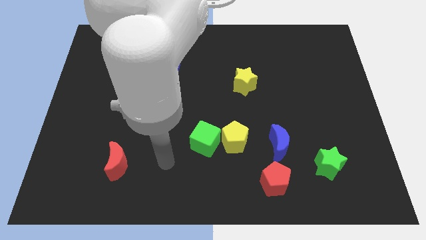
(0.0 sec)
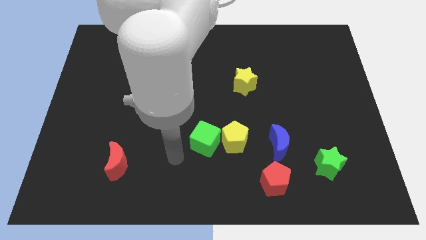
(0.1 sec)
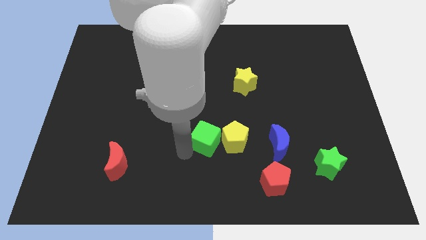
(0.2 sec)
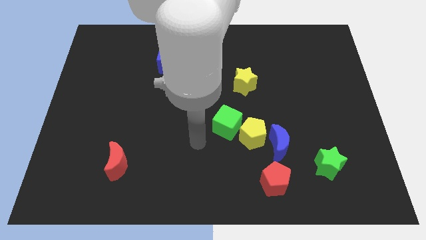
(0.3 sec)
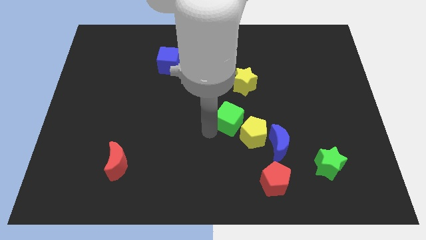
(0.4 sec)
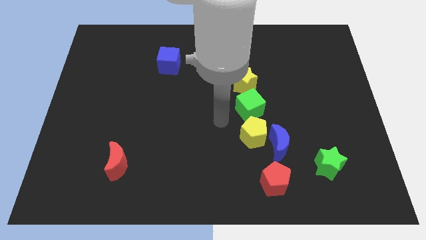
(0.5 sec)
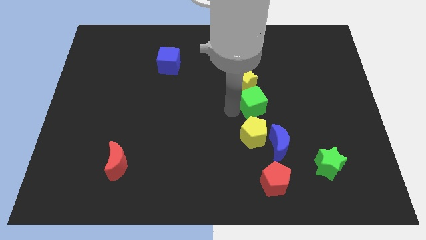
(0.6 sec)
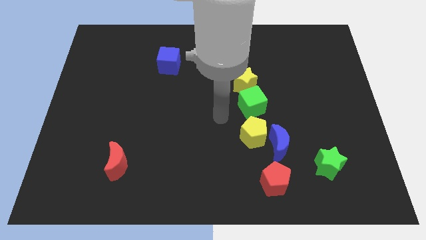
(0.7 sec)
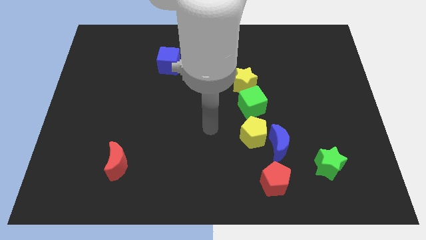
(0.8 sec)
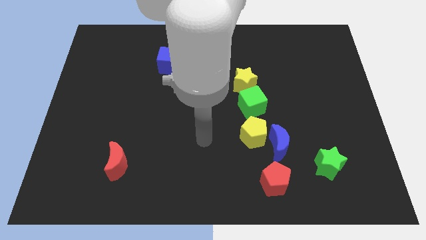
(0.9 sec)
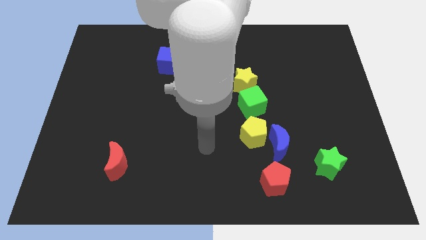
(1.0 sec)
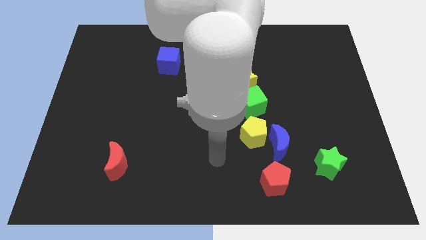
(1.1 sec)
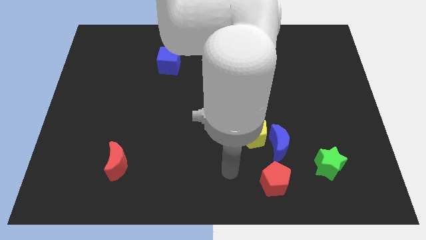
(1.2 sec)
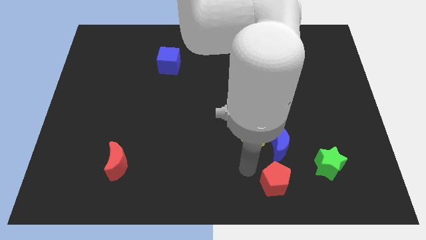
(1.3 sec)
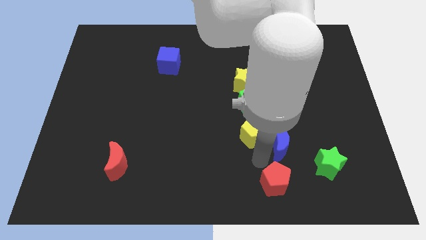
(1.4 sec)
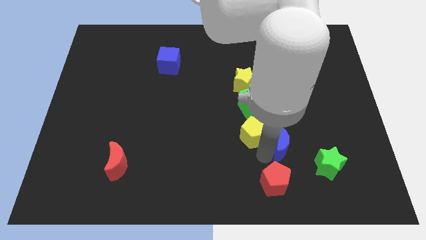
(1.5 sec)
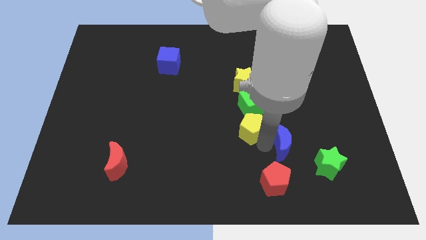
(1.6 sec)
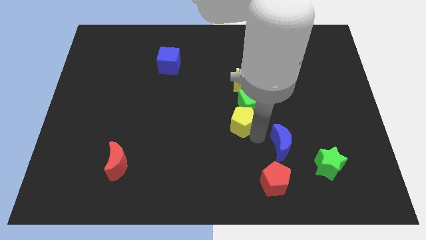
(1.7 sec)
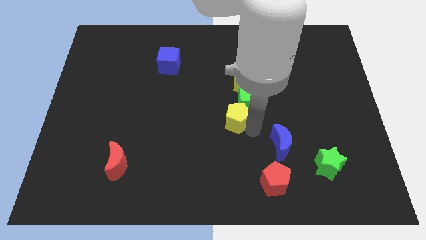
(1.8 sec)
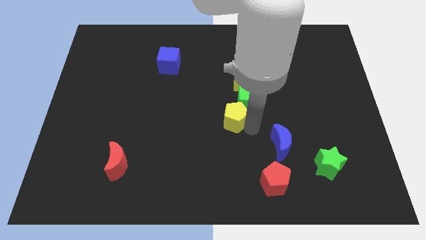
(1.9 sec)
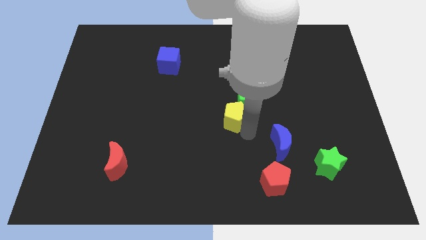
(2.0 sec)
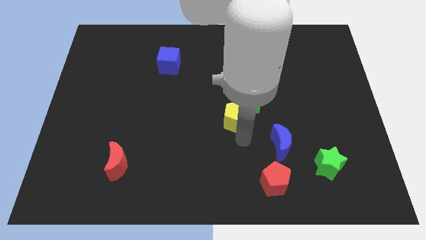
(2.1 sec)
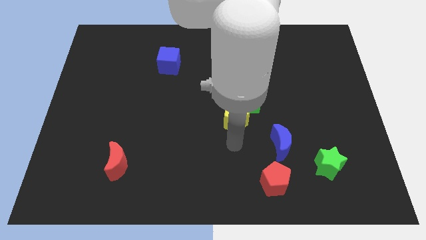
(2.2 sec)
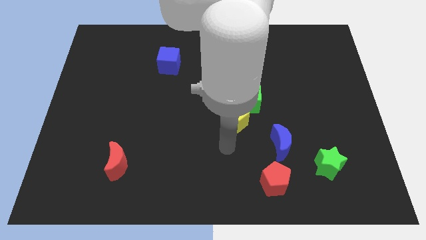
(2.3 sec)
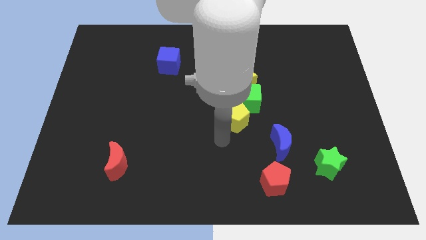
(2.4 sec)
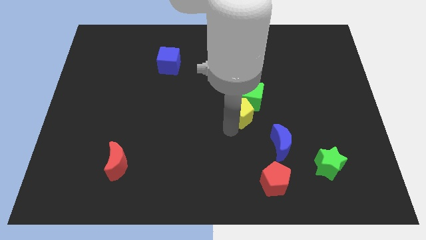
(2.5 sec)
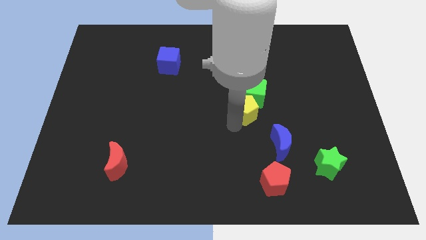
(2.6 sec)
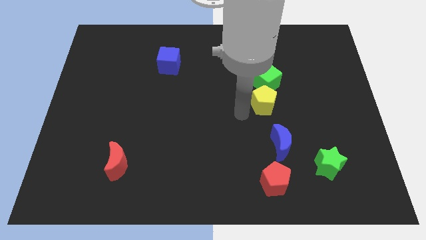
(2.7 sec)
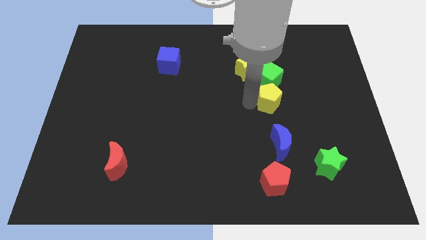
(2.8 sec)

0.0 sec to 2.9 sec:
push yellow pentagon below blue crescent

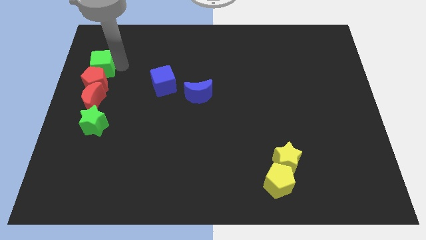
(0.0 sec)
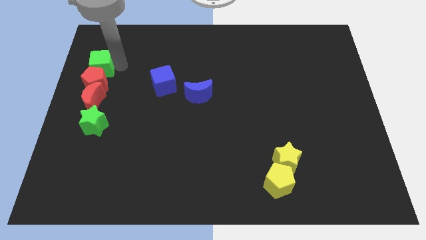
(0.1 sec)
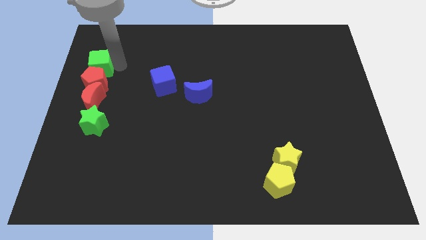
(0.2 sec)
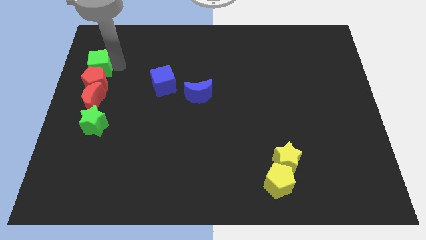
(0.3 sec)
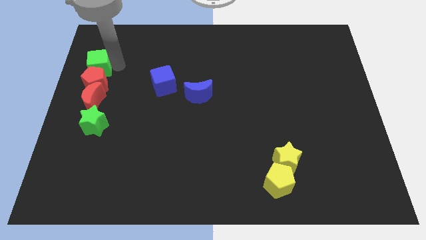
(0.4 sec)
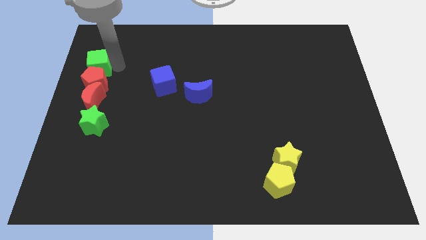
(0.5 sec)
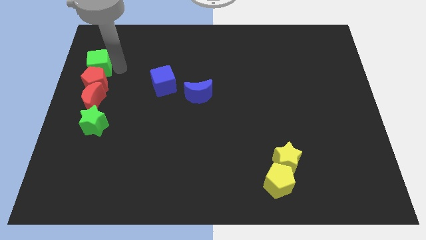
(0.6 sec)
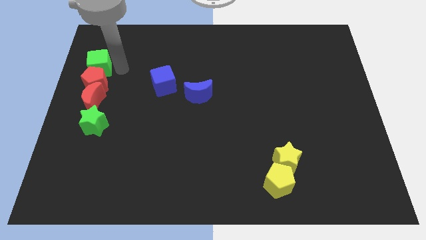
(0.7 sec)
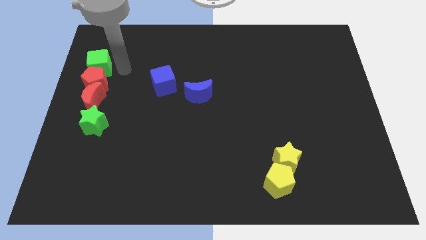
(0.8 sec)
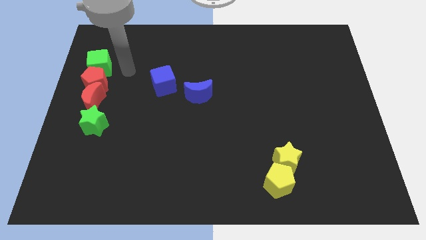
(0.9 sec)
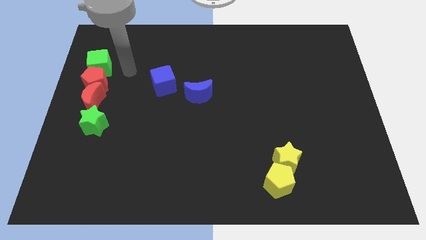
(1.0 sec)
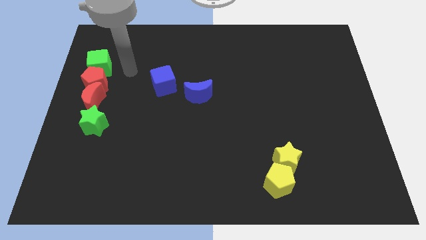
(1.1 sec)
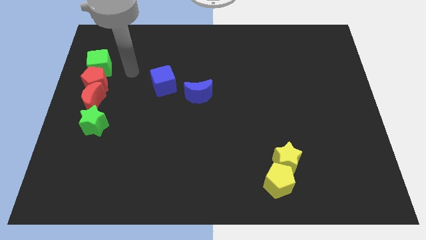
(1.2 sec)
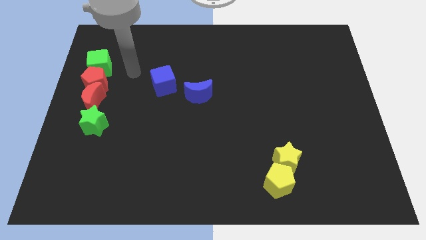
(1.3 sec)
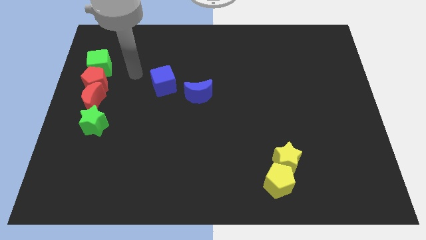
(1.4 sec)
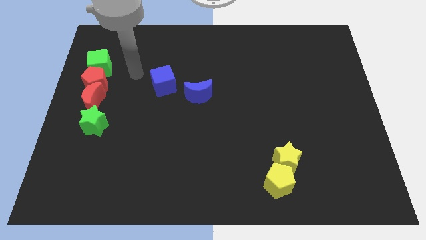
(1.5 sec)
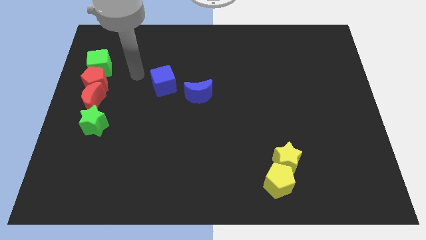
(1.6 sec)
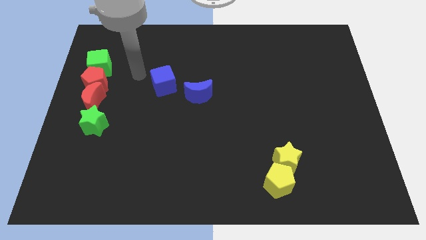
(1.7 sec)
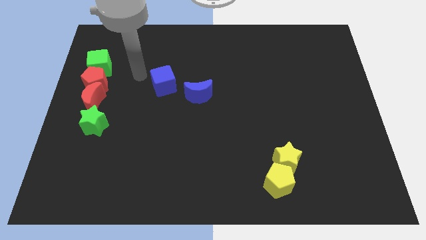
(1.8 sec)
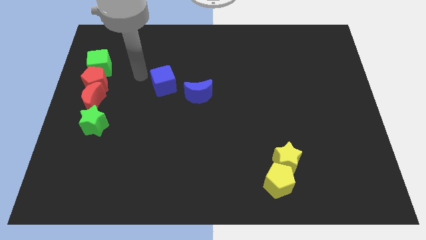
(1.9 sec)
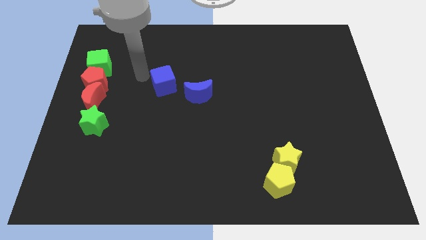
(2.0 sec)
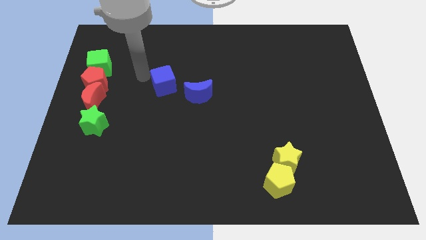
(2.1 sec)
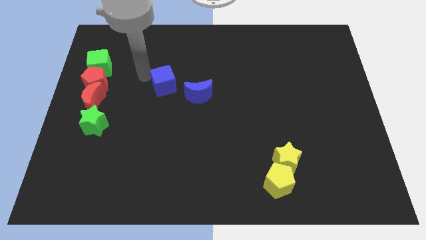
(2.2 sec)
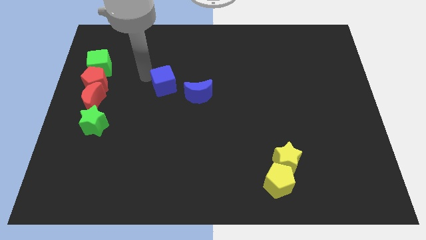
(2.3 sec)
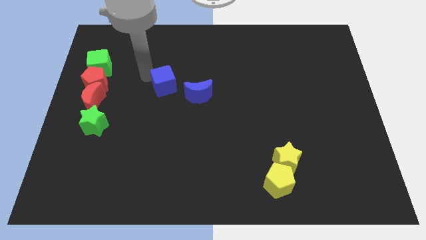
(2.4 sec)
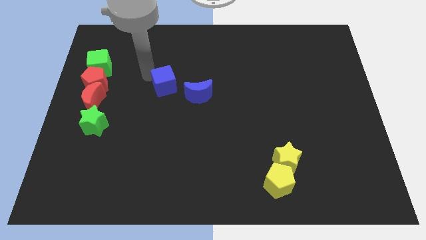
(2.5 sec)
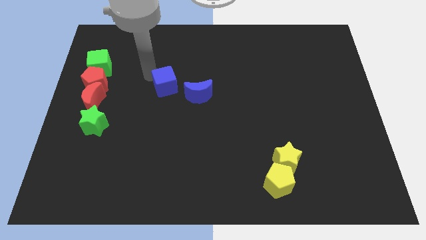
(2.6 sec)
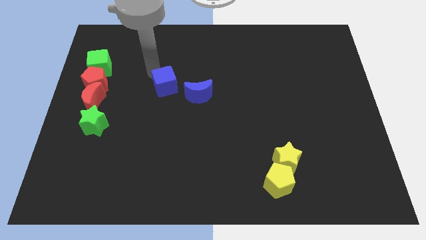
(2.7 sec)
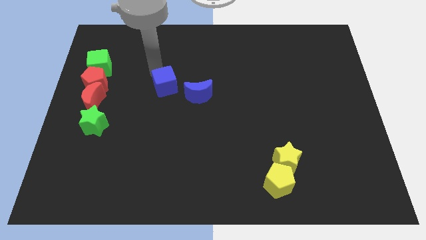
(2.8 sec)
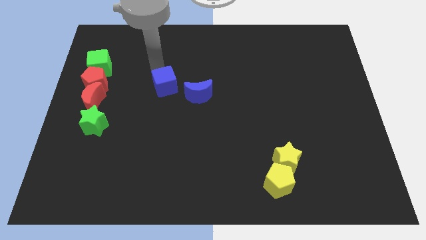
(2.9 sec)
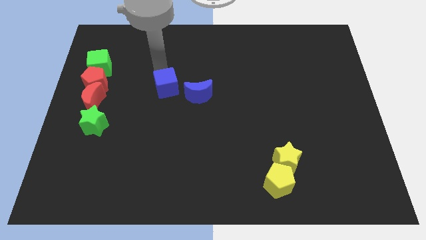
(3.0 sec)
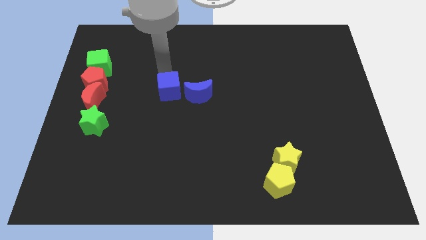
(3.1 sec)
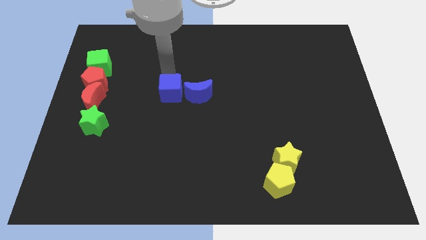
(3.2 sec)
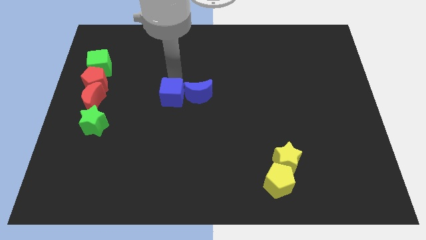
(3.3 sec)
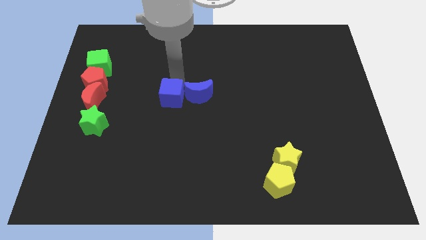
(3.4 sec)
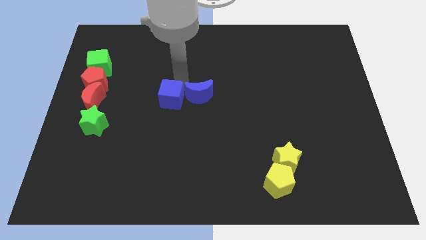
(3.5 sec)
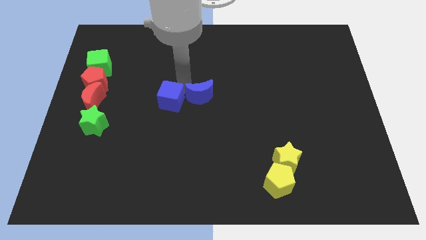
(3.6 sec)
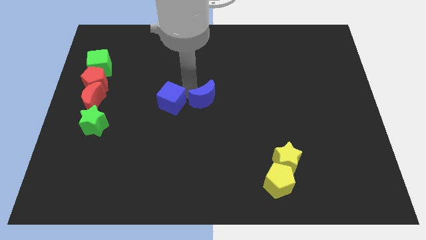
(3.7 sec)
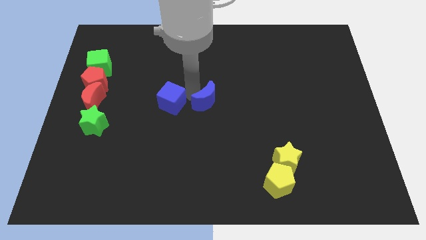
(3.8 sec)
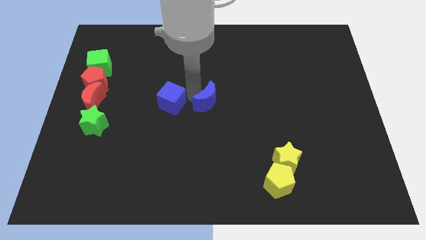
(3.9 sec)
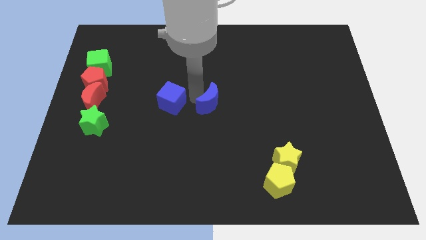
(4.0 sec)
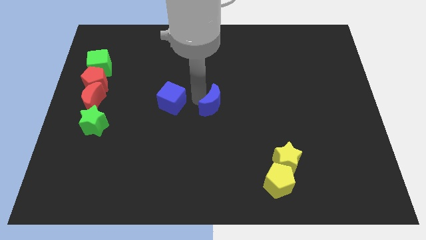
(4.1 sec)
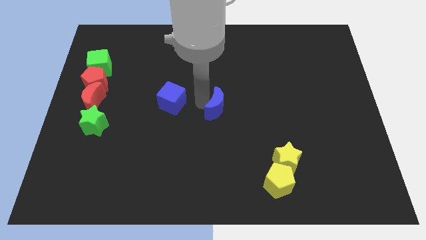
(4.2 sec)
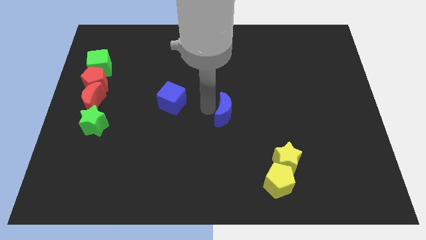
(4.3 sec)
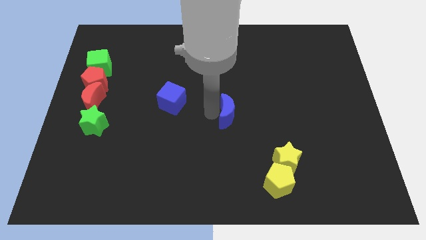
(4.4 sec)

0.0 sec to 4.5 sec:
move the blue crescent to the center of the board

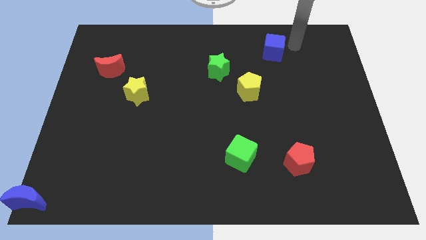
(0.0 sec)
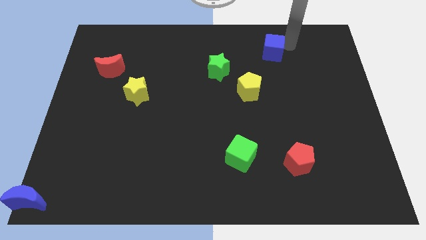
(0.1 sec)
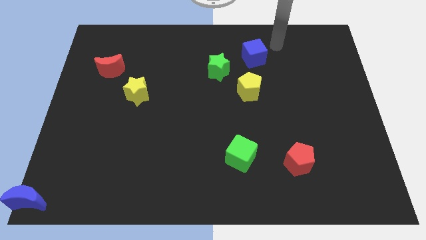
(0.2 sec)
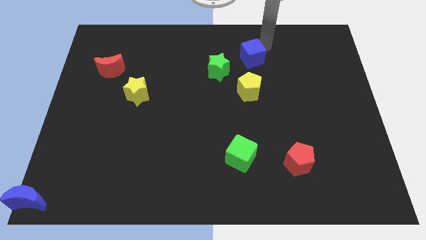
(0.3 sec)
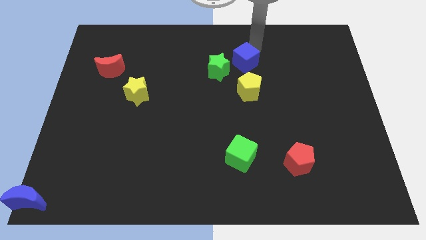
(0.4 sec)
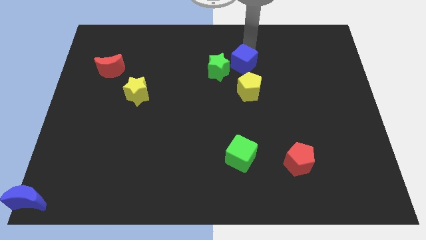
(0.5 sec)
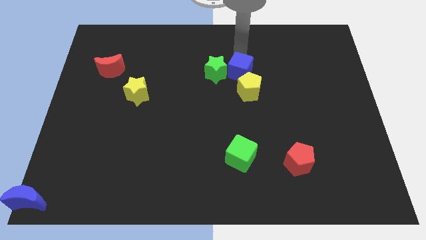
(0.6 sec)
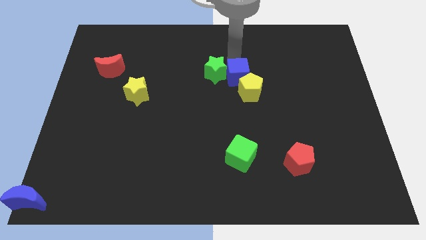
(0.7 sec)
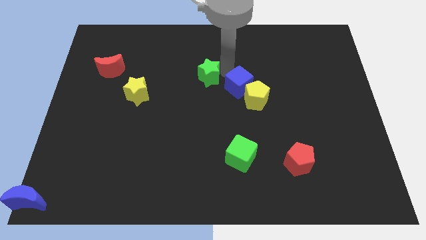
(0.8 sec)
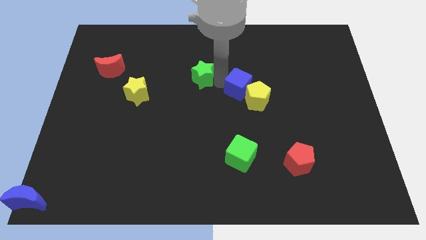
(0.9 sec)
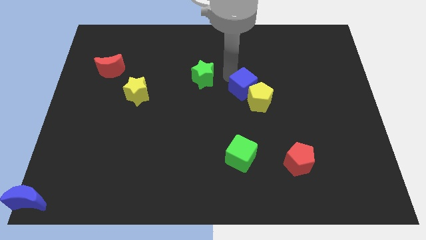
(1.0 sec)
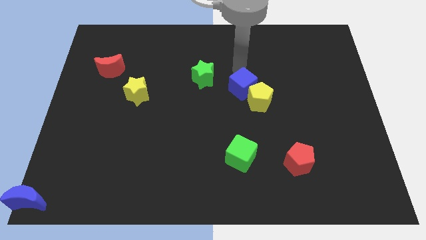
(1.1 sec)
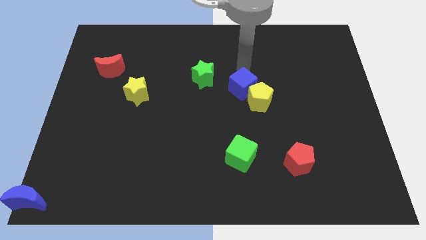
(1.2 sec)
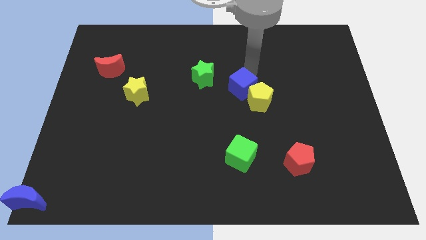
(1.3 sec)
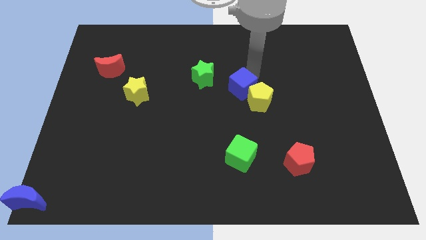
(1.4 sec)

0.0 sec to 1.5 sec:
make the blue cube to touch the left side of the yellow pentagon
